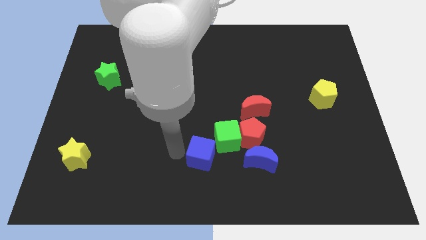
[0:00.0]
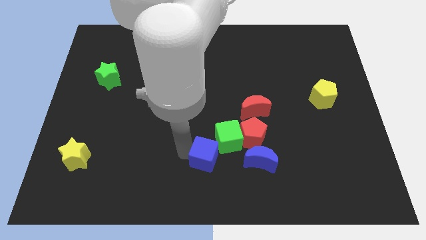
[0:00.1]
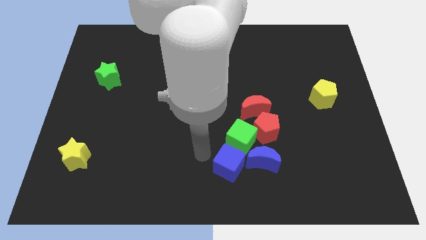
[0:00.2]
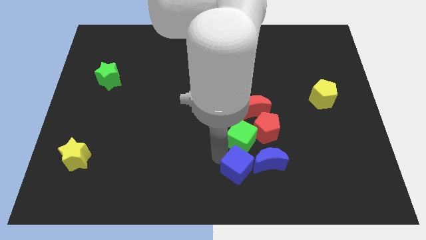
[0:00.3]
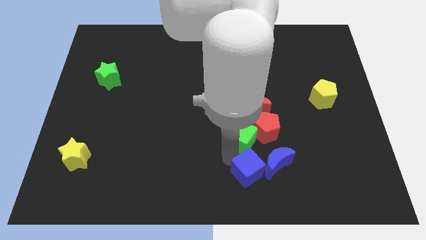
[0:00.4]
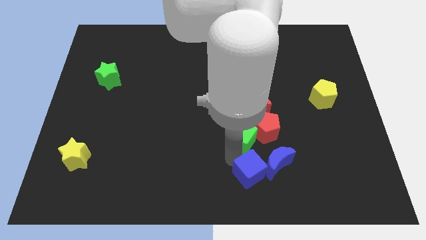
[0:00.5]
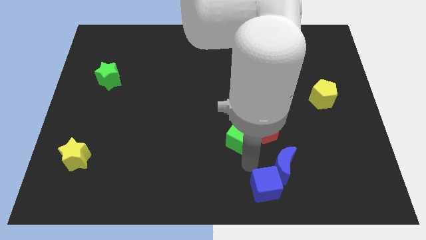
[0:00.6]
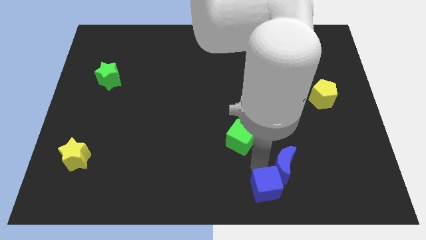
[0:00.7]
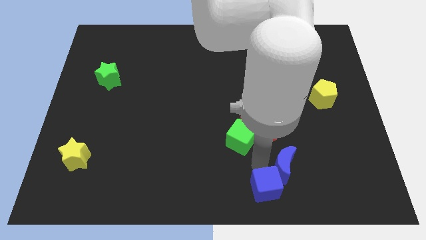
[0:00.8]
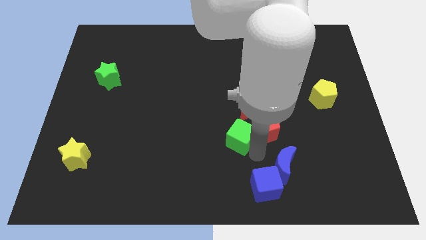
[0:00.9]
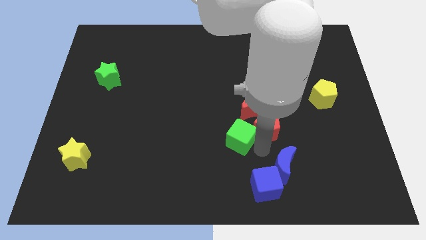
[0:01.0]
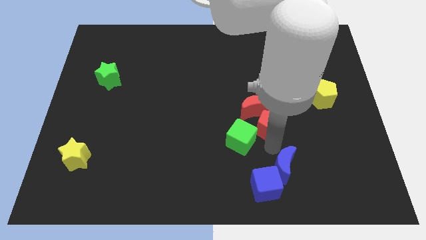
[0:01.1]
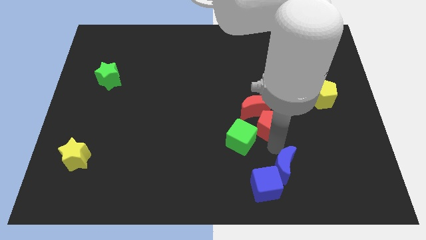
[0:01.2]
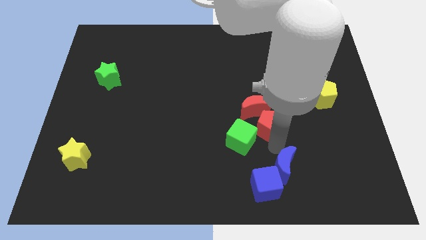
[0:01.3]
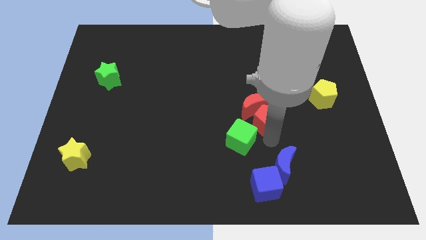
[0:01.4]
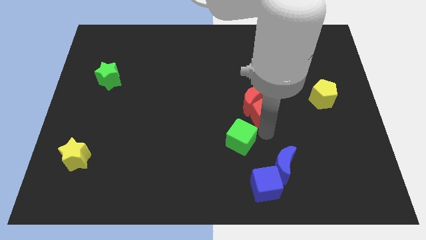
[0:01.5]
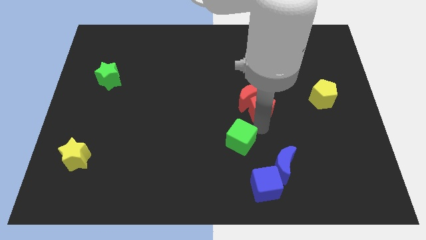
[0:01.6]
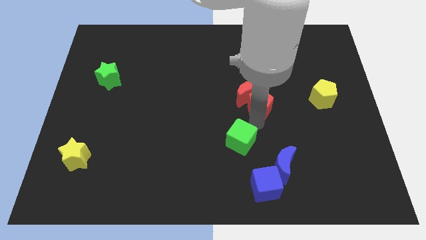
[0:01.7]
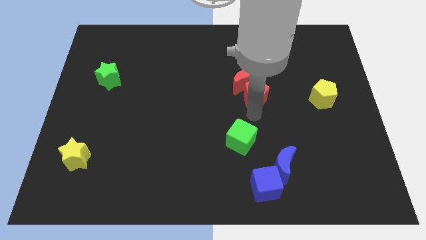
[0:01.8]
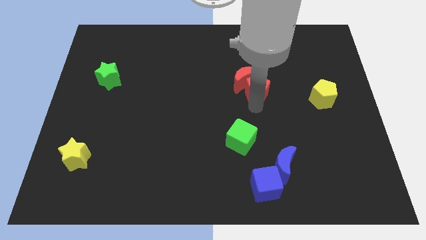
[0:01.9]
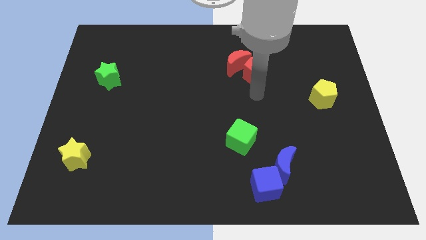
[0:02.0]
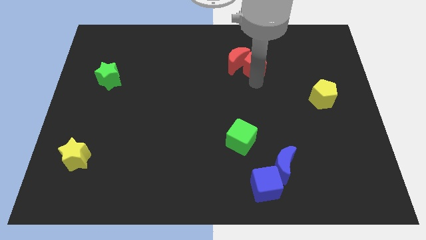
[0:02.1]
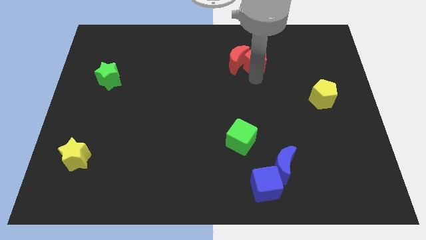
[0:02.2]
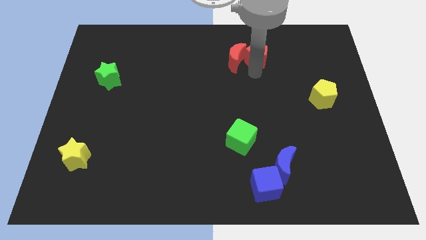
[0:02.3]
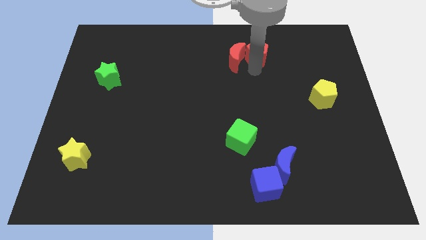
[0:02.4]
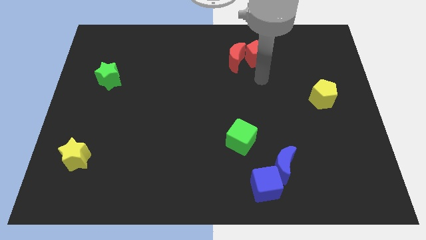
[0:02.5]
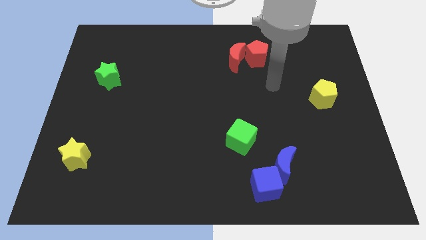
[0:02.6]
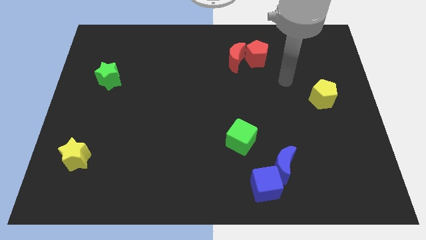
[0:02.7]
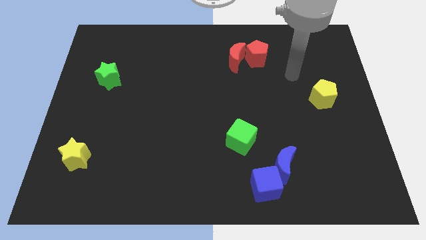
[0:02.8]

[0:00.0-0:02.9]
place red blocks vertically above green cube

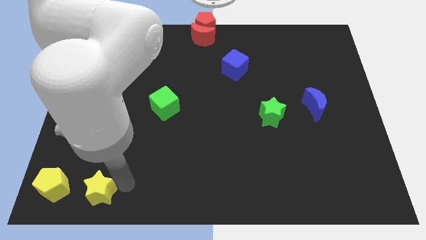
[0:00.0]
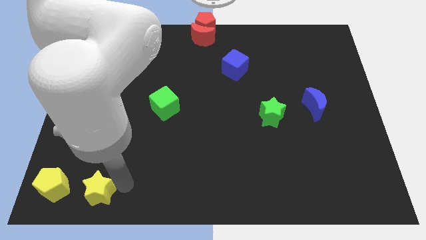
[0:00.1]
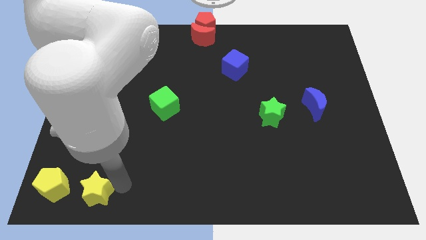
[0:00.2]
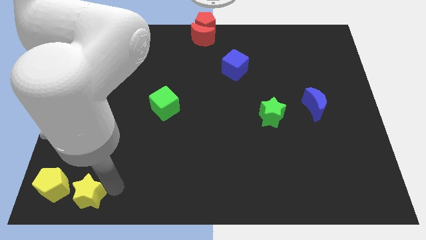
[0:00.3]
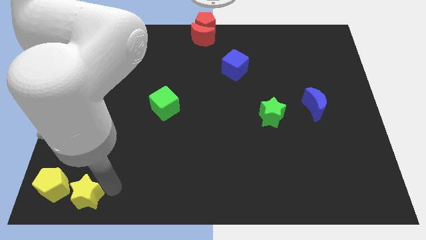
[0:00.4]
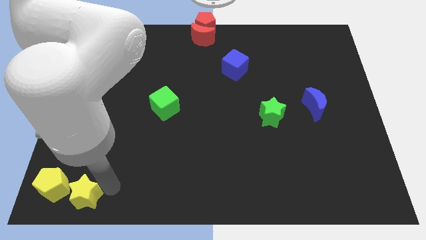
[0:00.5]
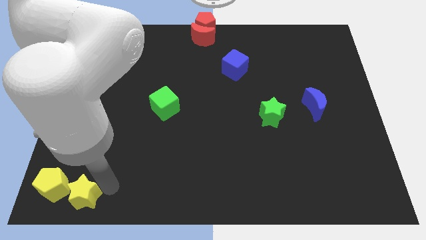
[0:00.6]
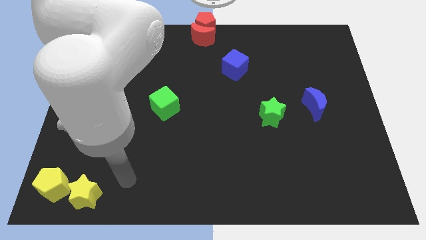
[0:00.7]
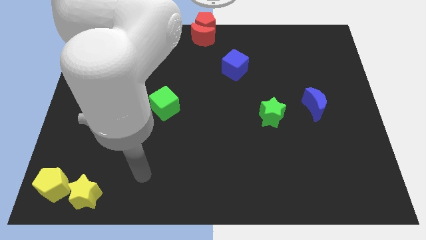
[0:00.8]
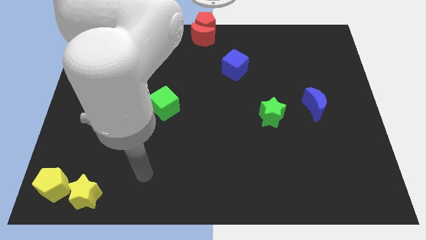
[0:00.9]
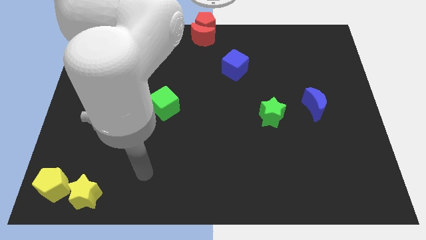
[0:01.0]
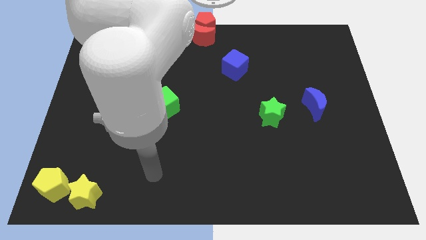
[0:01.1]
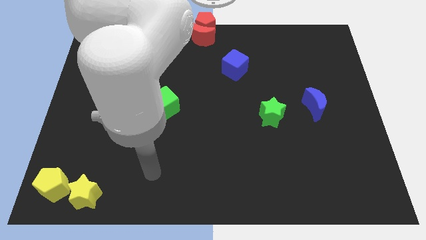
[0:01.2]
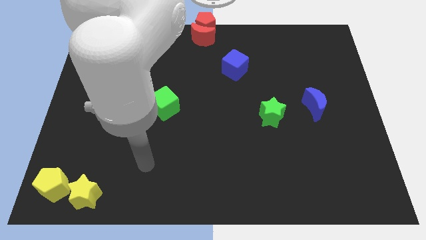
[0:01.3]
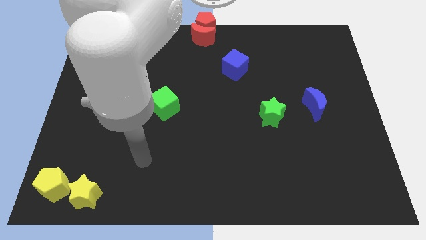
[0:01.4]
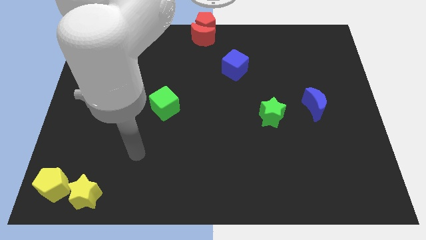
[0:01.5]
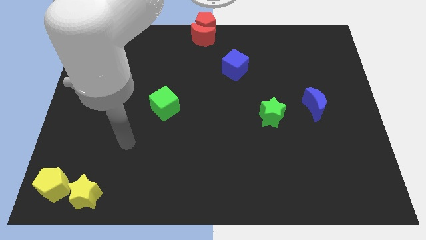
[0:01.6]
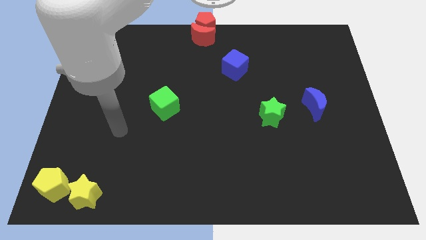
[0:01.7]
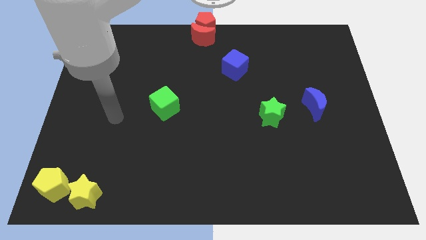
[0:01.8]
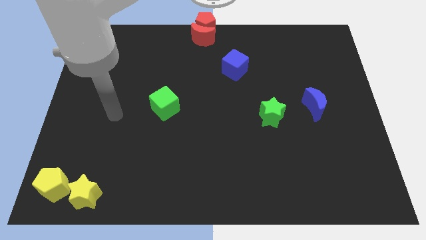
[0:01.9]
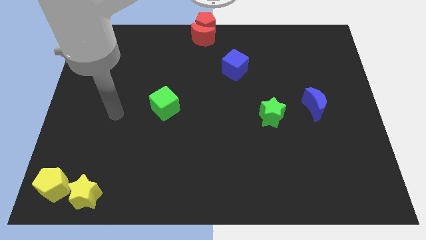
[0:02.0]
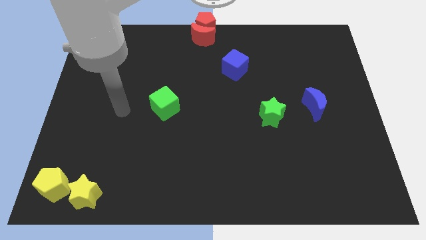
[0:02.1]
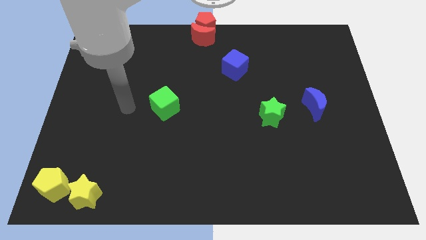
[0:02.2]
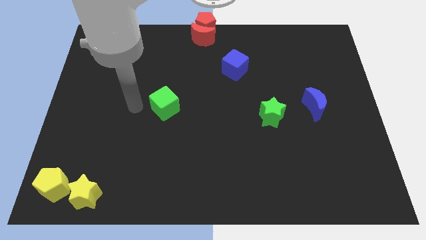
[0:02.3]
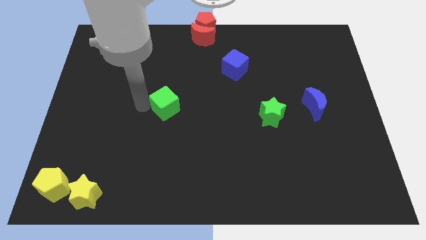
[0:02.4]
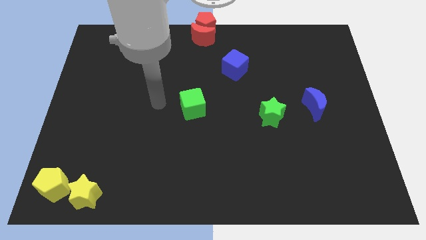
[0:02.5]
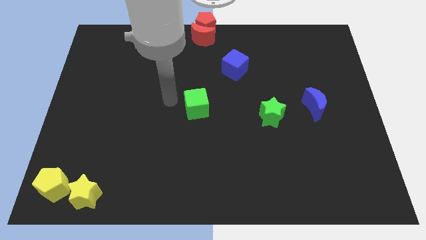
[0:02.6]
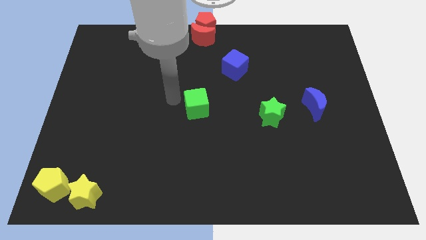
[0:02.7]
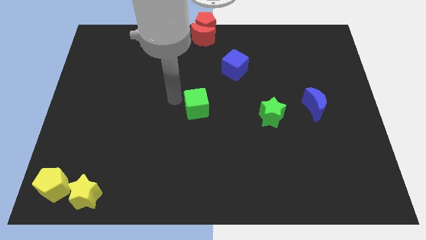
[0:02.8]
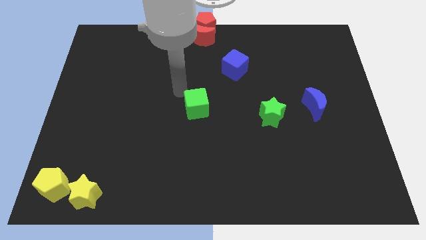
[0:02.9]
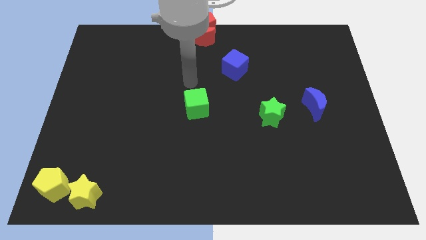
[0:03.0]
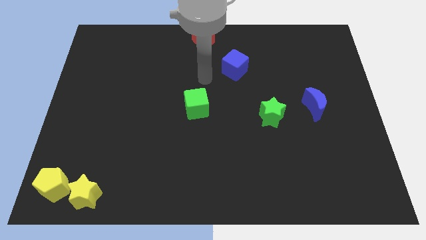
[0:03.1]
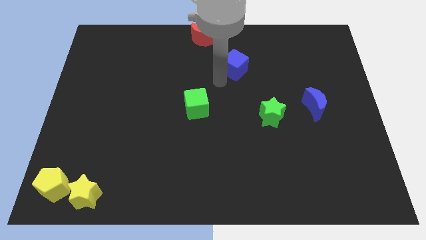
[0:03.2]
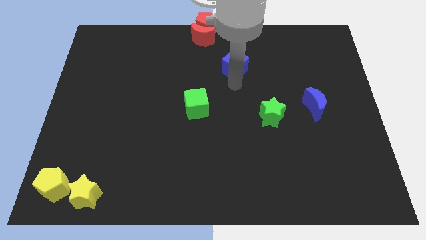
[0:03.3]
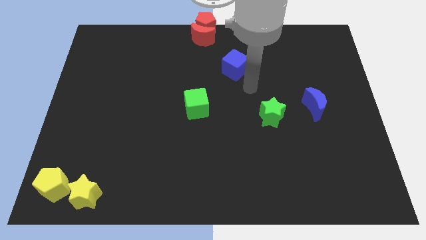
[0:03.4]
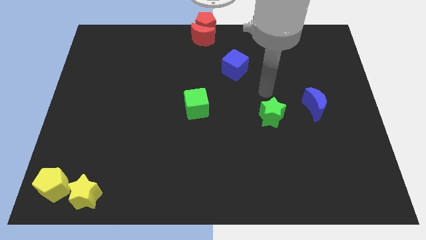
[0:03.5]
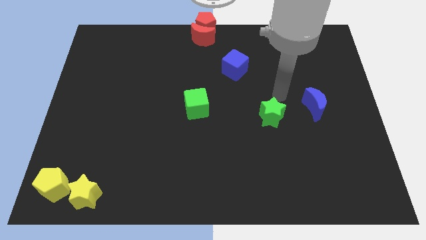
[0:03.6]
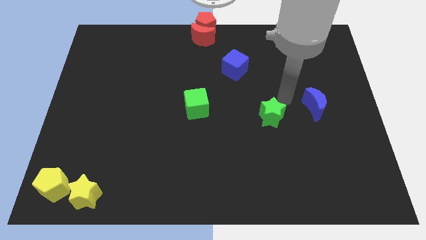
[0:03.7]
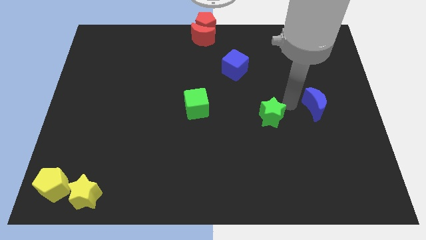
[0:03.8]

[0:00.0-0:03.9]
push the green cube towards the centre of the board

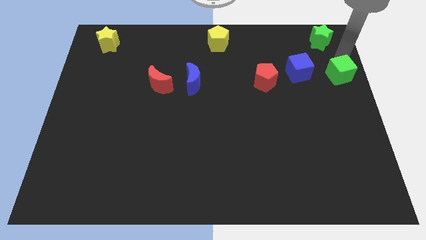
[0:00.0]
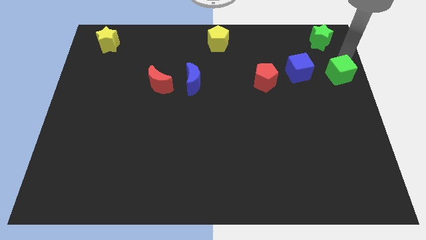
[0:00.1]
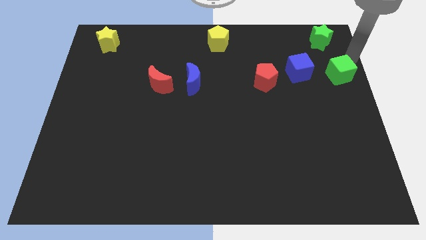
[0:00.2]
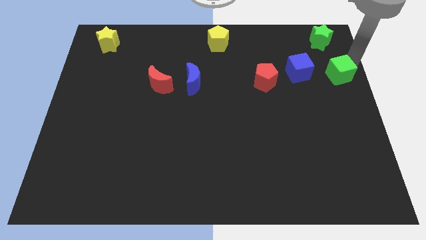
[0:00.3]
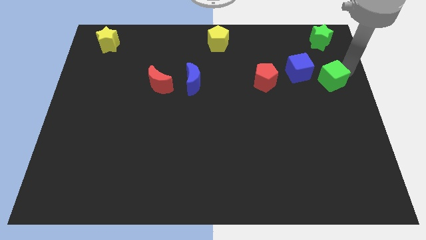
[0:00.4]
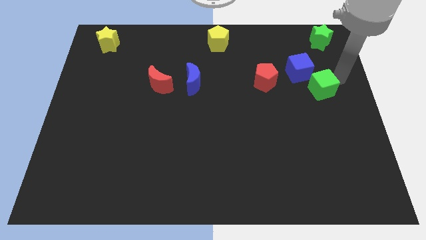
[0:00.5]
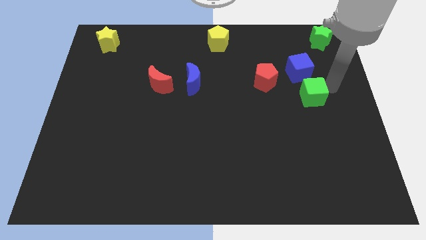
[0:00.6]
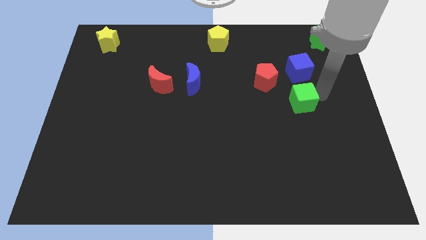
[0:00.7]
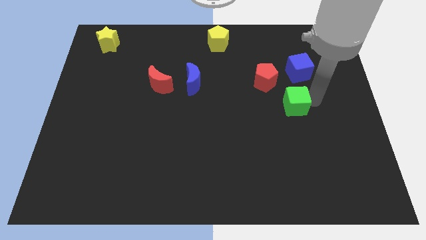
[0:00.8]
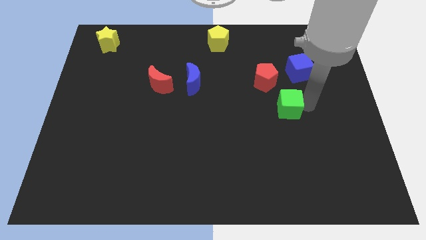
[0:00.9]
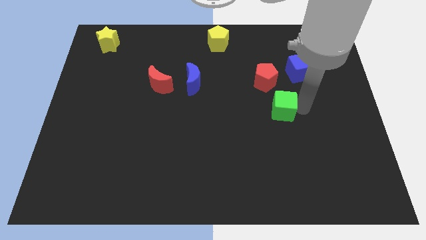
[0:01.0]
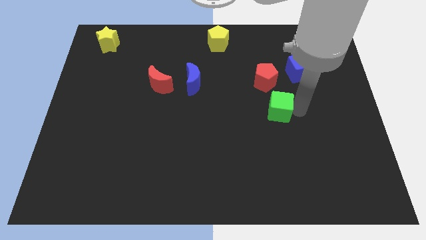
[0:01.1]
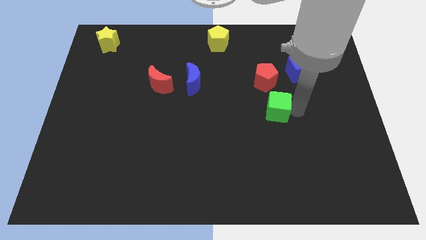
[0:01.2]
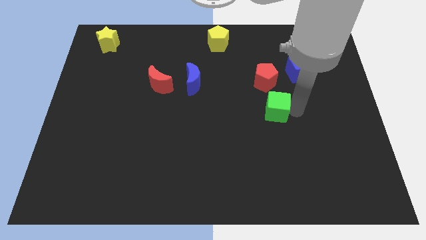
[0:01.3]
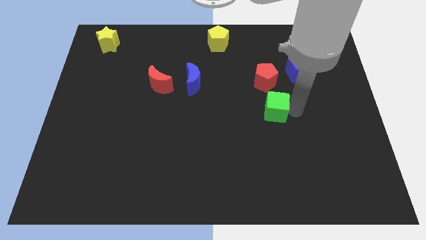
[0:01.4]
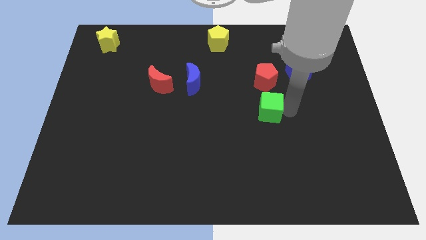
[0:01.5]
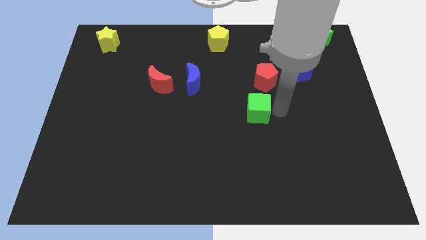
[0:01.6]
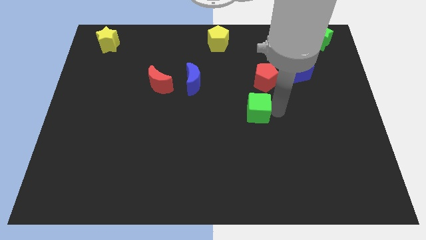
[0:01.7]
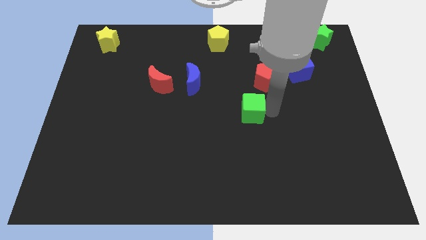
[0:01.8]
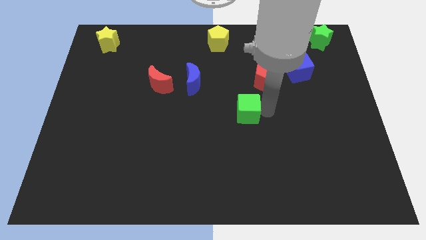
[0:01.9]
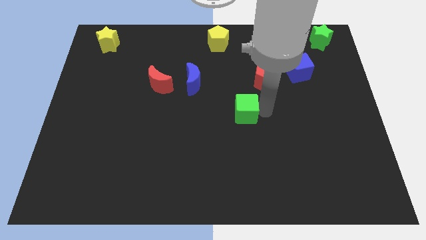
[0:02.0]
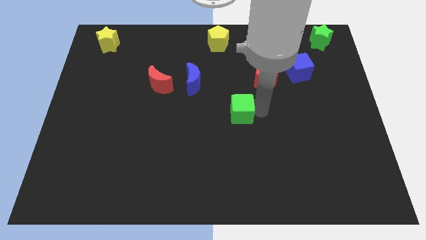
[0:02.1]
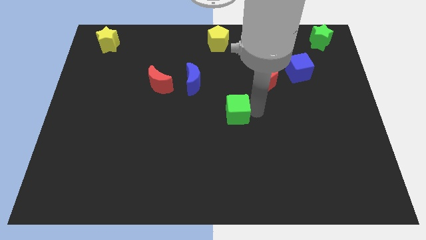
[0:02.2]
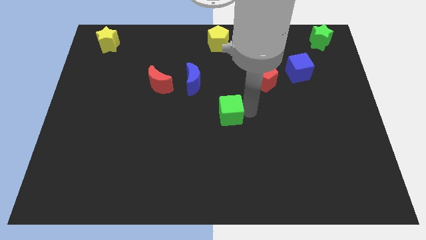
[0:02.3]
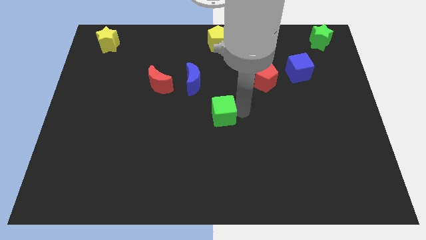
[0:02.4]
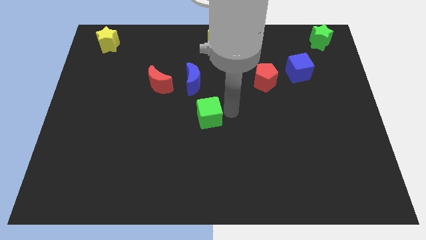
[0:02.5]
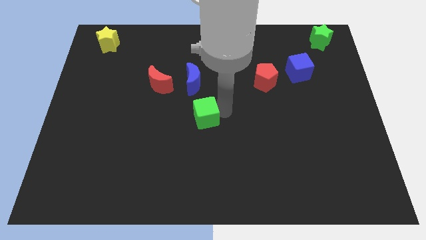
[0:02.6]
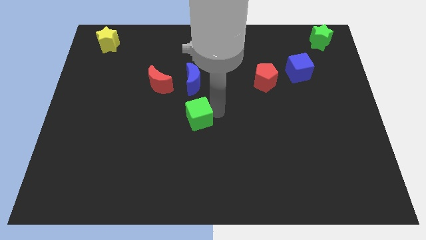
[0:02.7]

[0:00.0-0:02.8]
move the green cube to the bottom of the blue crescent
